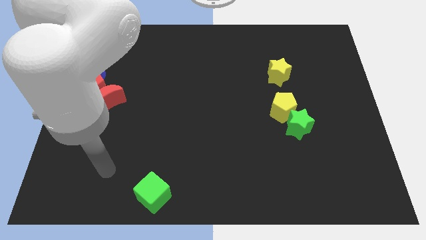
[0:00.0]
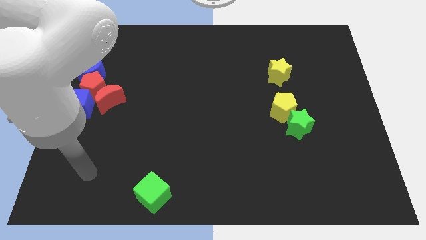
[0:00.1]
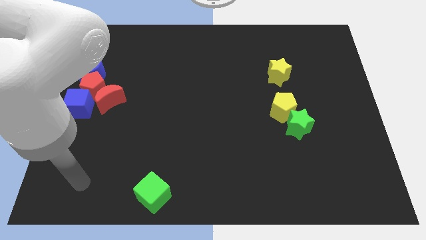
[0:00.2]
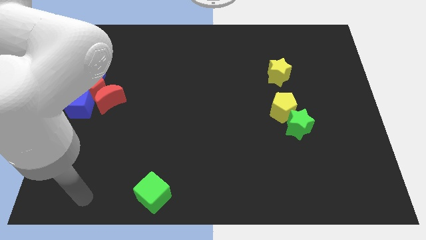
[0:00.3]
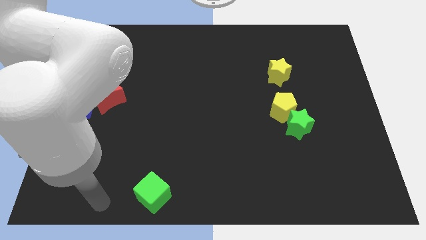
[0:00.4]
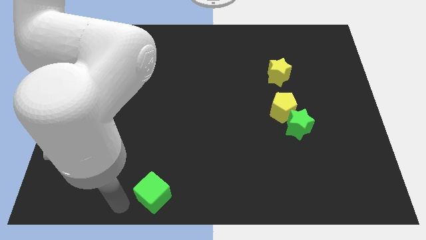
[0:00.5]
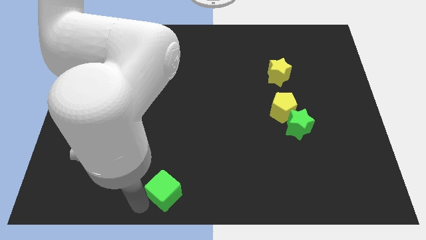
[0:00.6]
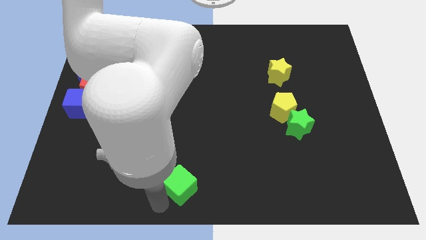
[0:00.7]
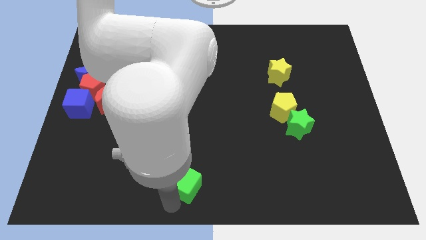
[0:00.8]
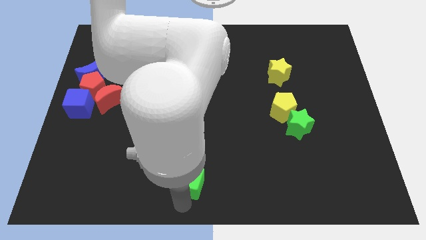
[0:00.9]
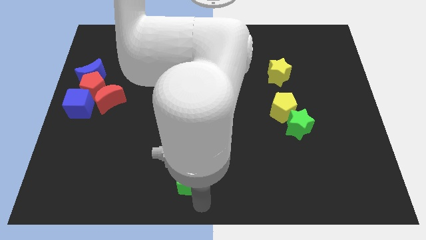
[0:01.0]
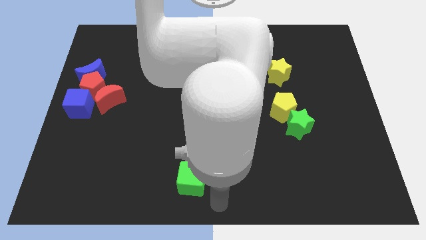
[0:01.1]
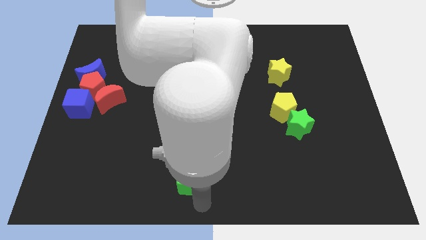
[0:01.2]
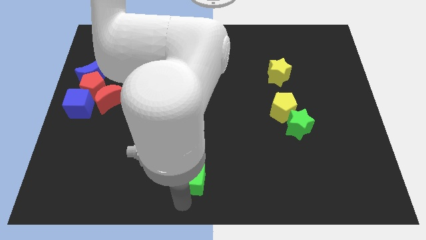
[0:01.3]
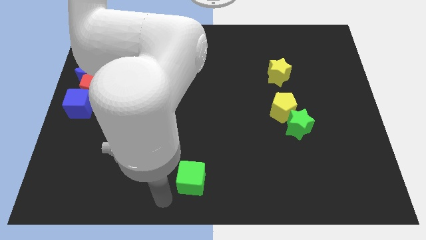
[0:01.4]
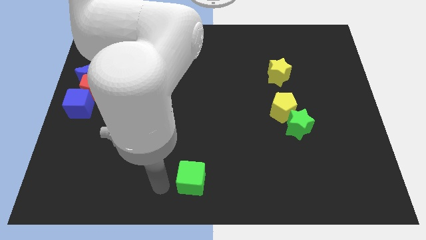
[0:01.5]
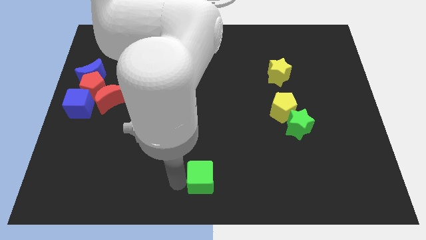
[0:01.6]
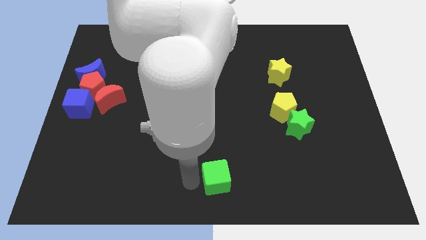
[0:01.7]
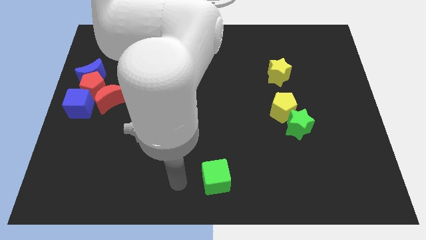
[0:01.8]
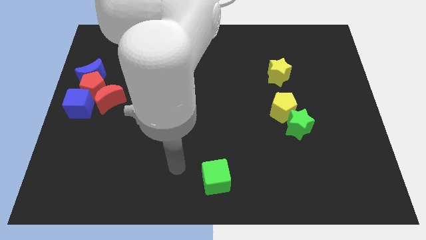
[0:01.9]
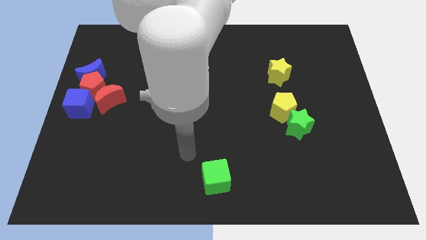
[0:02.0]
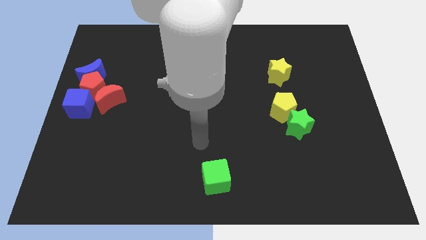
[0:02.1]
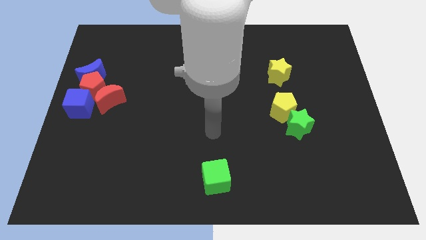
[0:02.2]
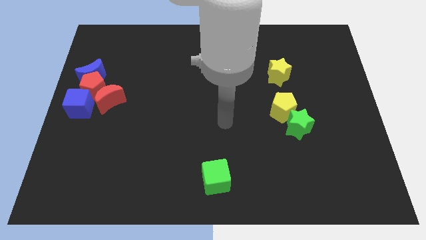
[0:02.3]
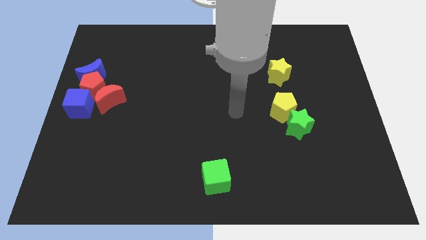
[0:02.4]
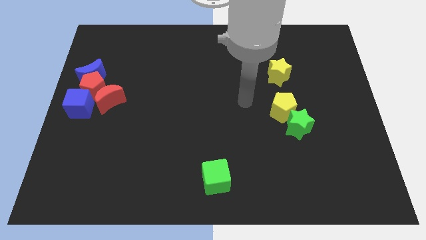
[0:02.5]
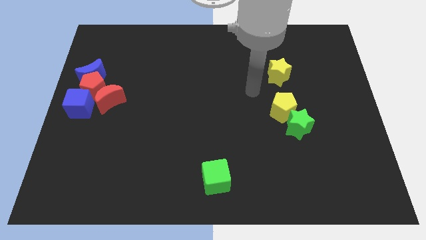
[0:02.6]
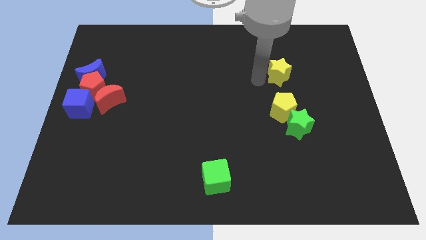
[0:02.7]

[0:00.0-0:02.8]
push green cube towards bottom middle of the board

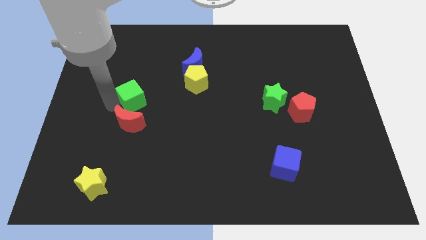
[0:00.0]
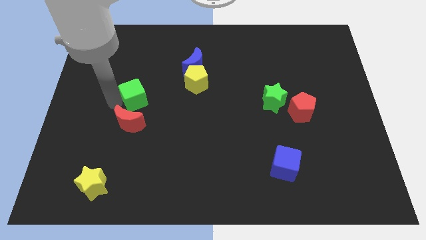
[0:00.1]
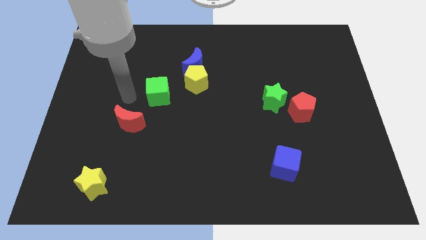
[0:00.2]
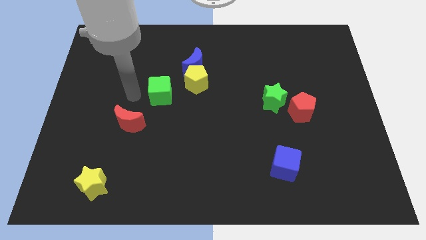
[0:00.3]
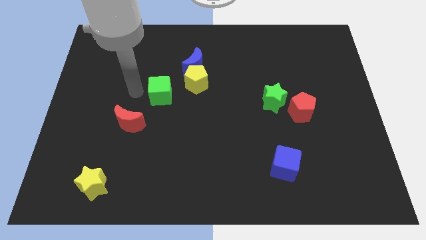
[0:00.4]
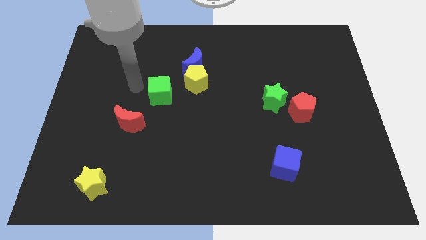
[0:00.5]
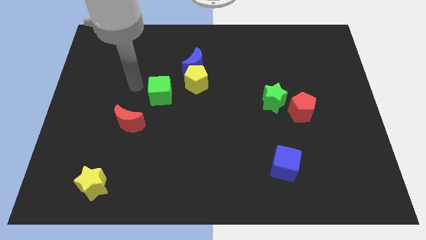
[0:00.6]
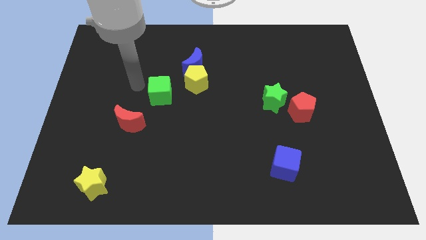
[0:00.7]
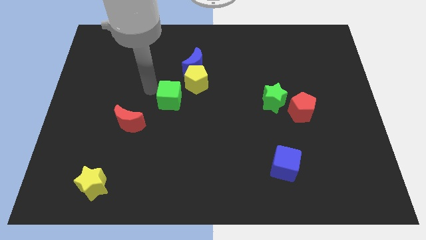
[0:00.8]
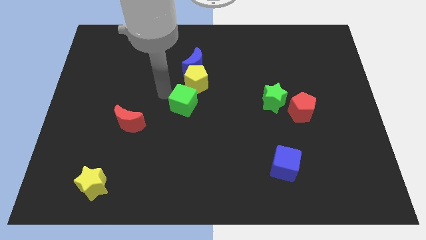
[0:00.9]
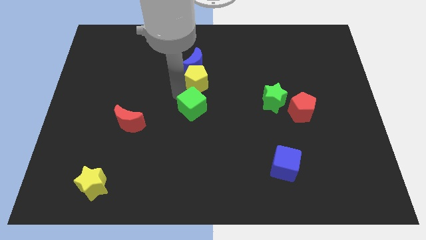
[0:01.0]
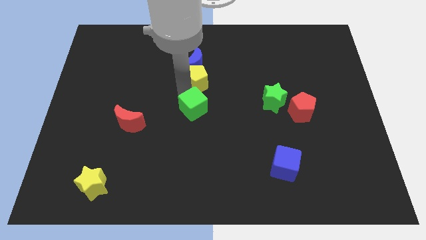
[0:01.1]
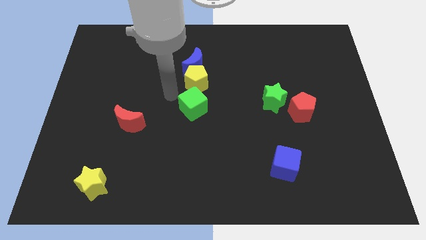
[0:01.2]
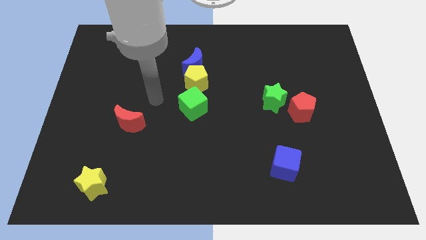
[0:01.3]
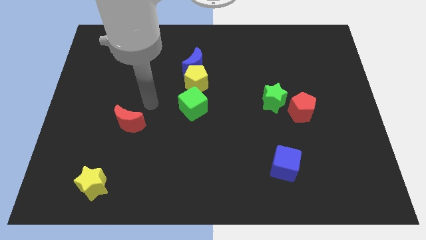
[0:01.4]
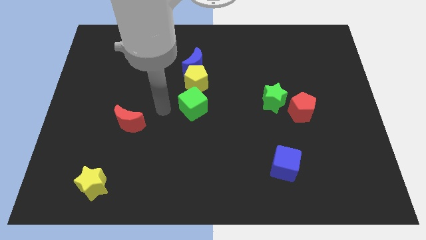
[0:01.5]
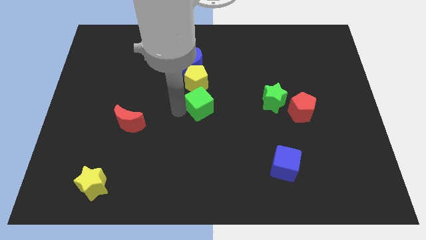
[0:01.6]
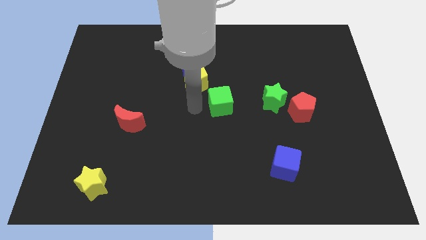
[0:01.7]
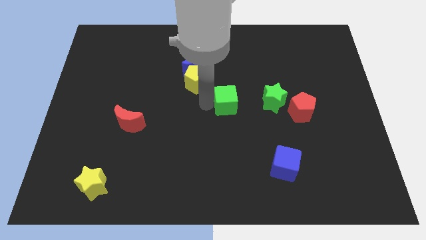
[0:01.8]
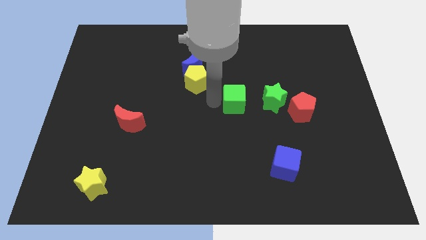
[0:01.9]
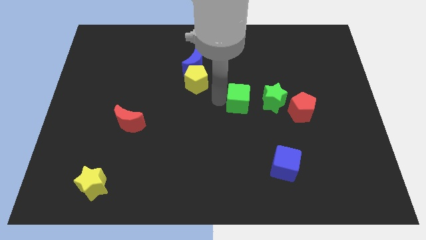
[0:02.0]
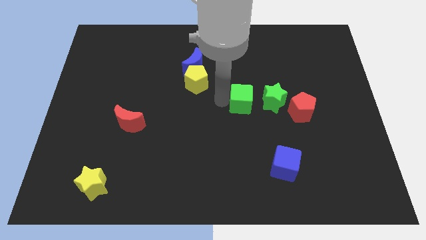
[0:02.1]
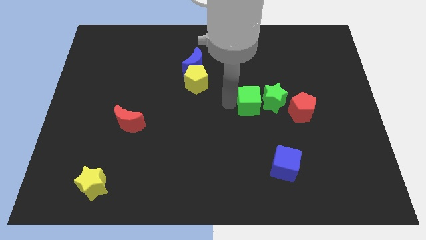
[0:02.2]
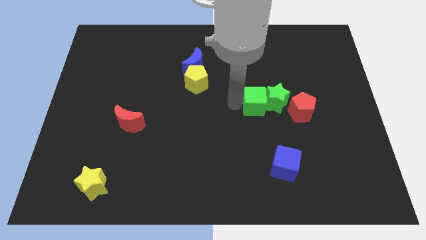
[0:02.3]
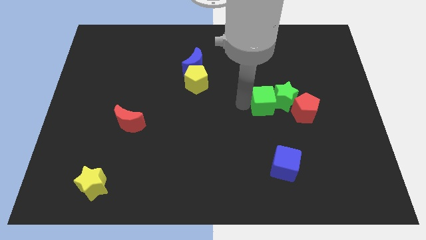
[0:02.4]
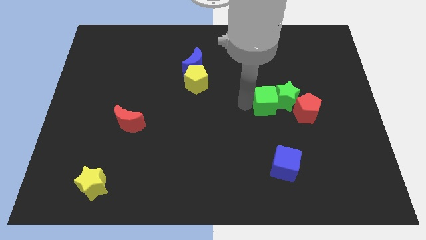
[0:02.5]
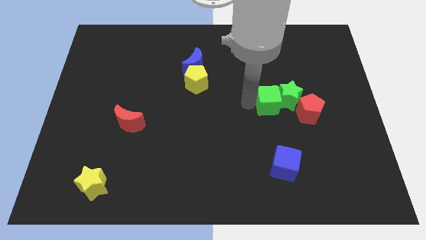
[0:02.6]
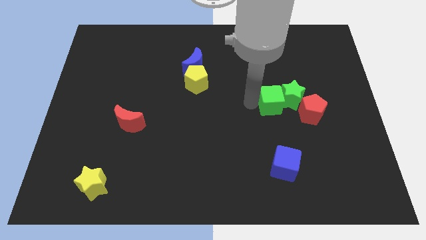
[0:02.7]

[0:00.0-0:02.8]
place the green cube left to the green star

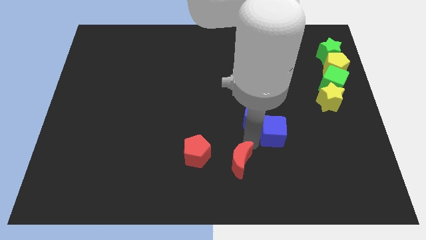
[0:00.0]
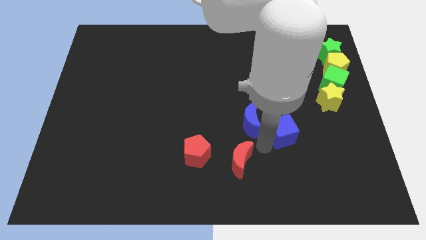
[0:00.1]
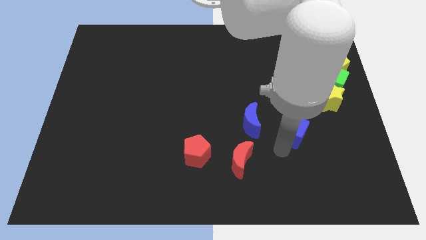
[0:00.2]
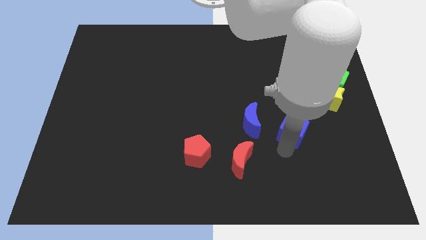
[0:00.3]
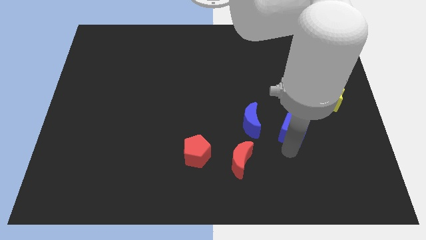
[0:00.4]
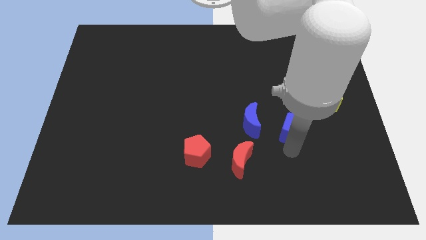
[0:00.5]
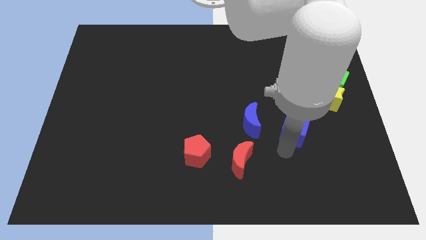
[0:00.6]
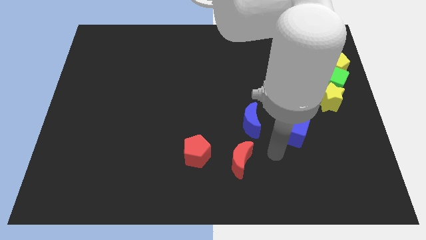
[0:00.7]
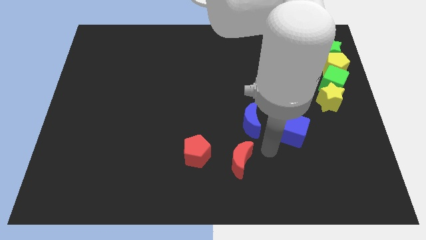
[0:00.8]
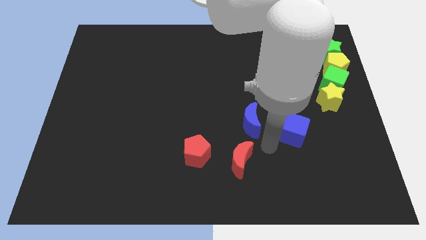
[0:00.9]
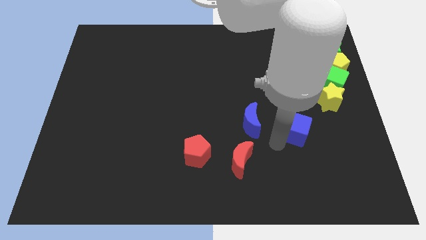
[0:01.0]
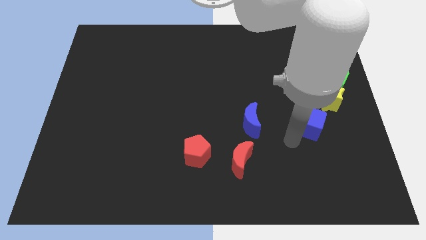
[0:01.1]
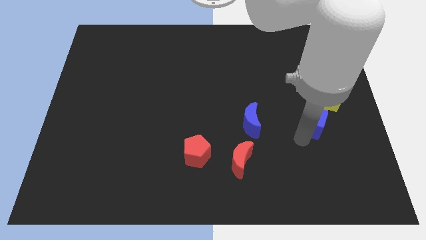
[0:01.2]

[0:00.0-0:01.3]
separate the blue cube from the blue crescent

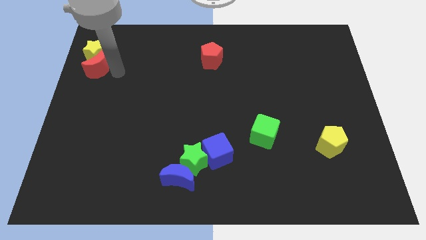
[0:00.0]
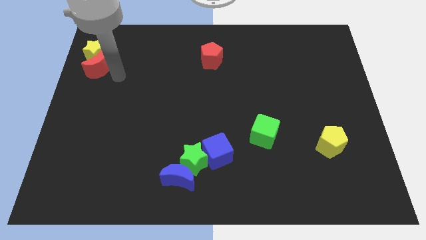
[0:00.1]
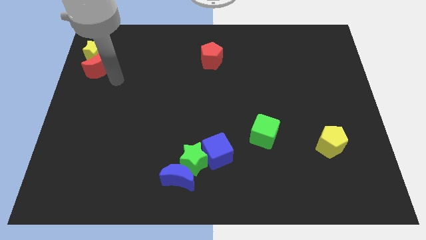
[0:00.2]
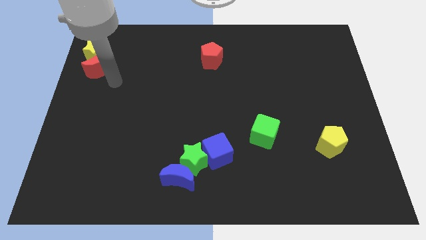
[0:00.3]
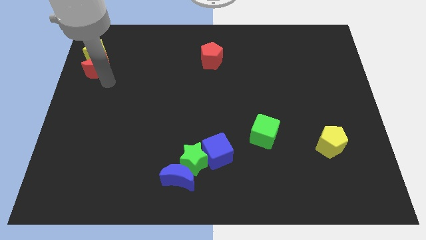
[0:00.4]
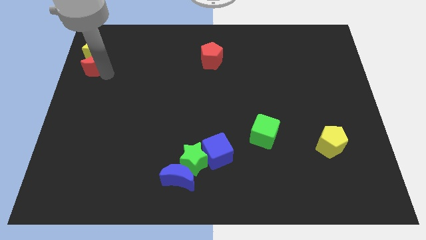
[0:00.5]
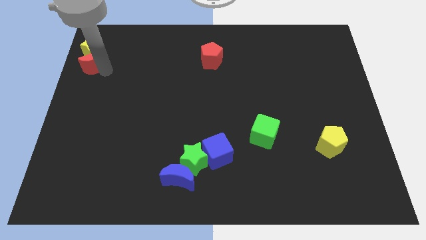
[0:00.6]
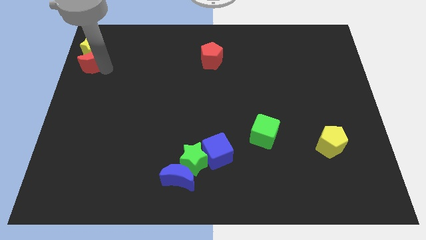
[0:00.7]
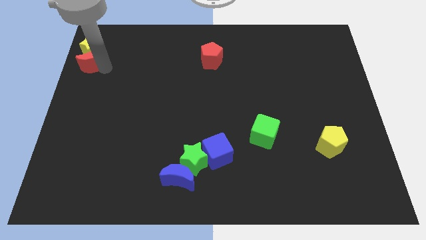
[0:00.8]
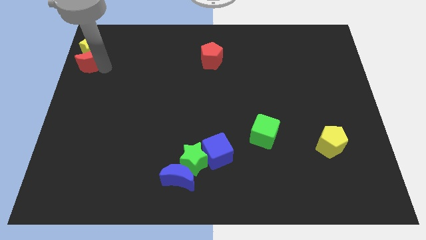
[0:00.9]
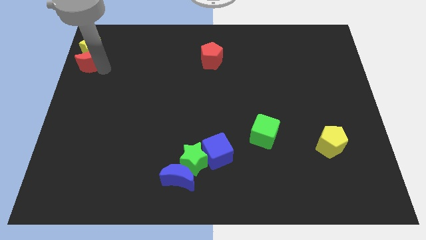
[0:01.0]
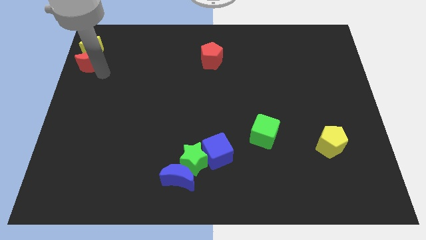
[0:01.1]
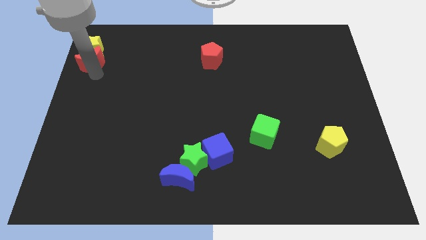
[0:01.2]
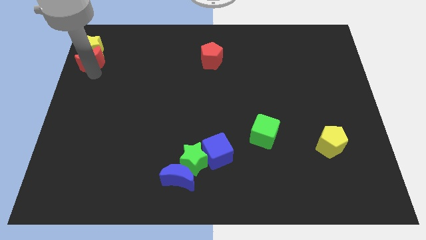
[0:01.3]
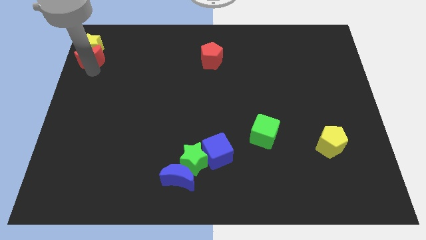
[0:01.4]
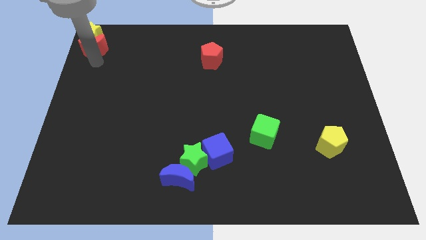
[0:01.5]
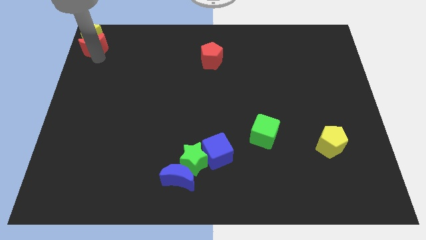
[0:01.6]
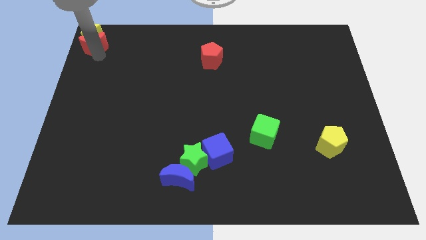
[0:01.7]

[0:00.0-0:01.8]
push the yellow star and red crescent together into the top left corner

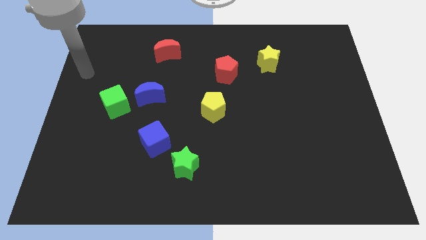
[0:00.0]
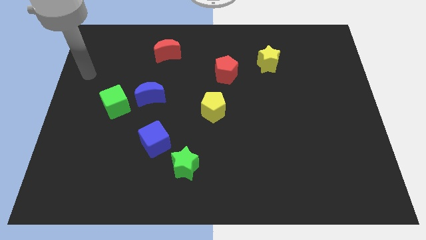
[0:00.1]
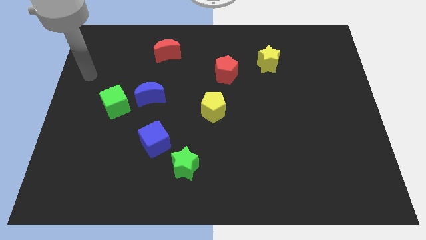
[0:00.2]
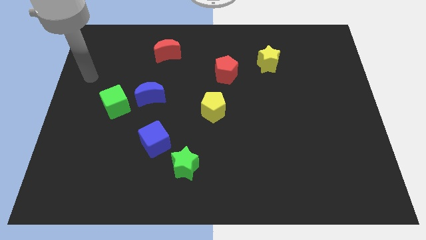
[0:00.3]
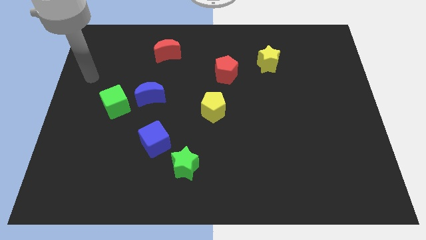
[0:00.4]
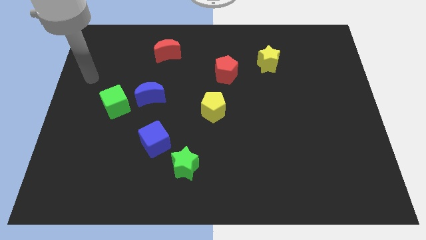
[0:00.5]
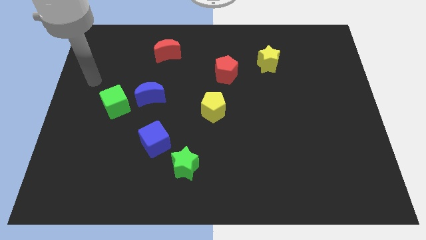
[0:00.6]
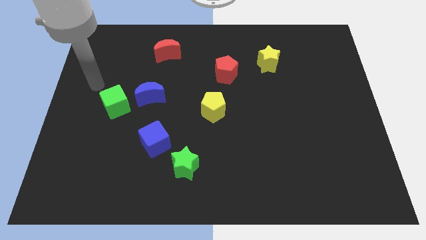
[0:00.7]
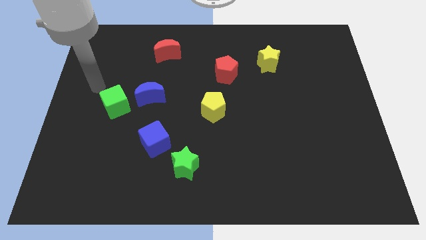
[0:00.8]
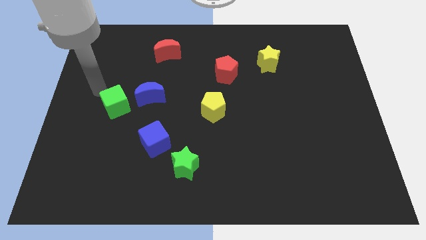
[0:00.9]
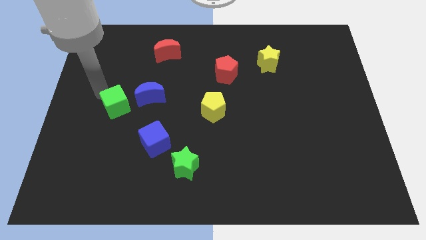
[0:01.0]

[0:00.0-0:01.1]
put arm on top of green cube
